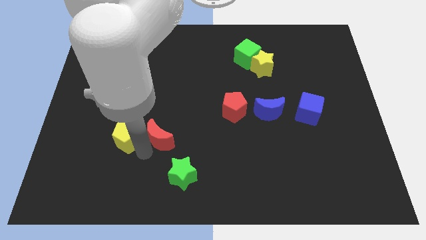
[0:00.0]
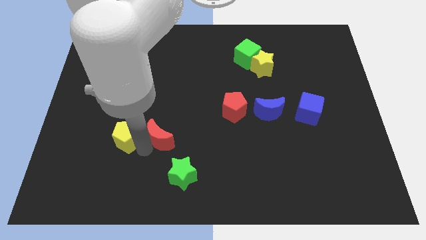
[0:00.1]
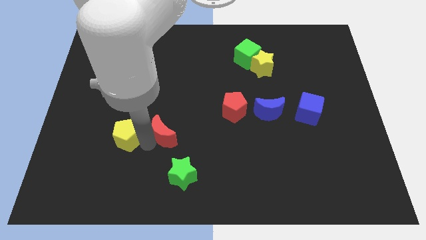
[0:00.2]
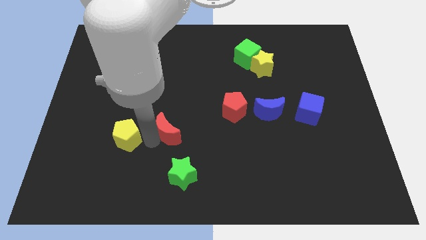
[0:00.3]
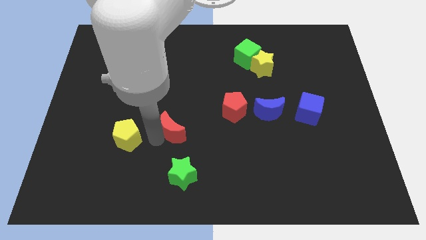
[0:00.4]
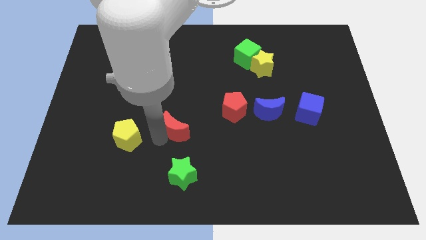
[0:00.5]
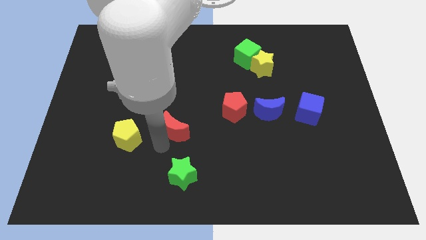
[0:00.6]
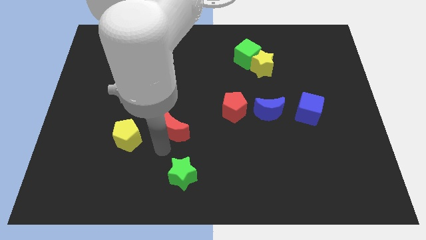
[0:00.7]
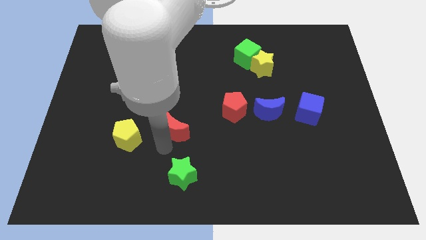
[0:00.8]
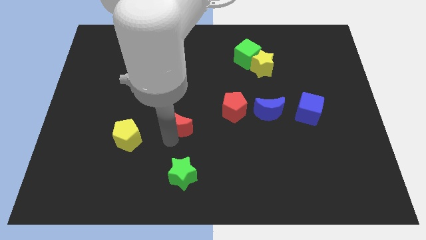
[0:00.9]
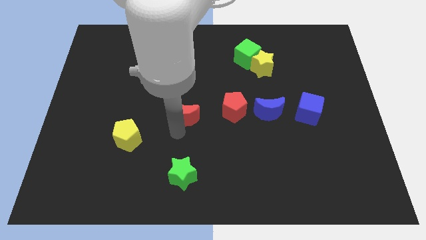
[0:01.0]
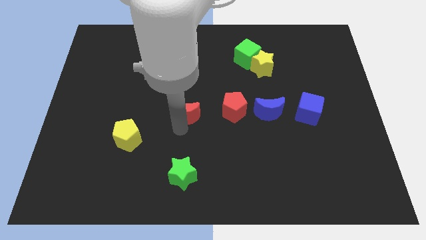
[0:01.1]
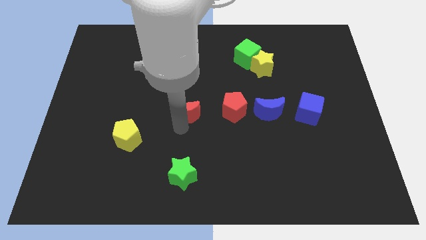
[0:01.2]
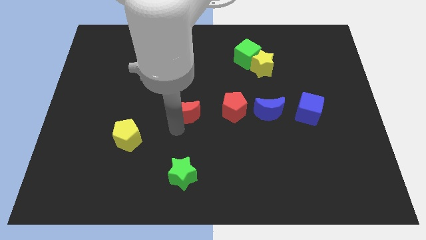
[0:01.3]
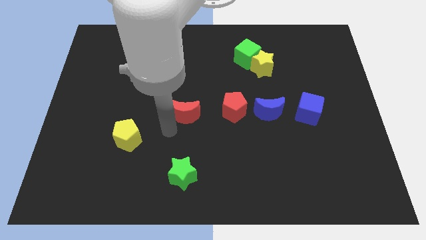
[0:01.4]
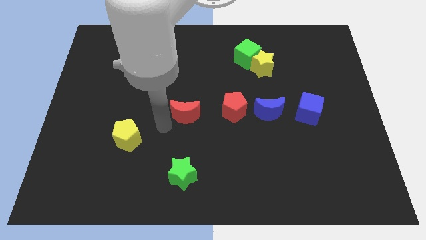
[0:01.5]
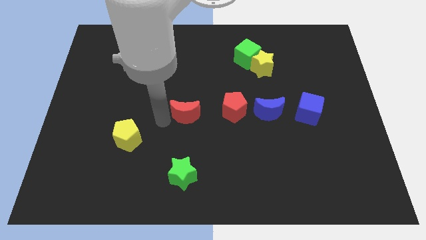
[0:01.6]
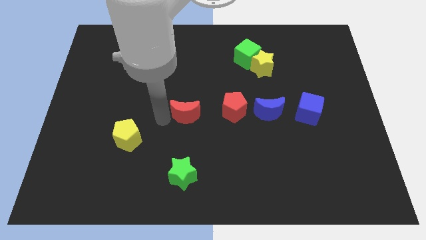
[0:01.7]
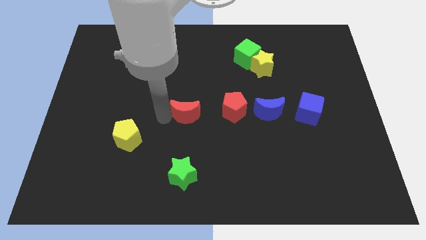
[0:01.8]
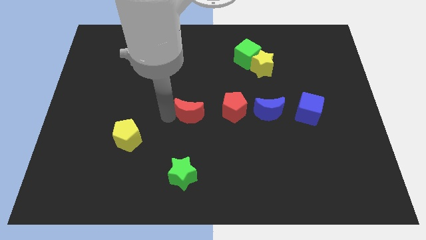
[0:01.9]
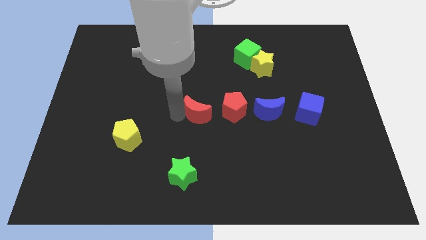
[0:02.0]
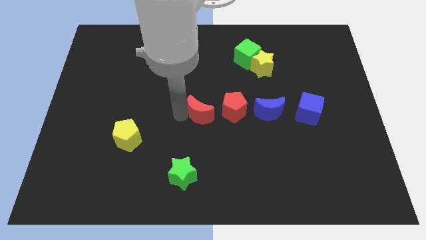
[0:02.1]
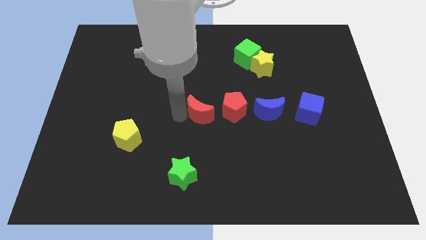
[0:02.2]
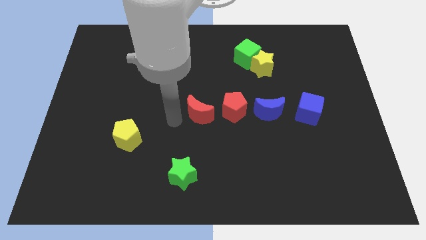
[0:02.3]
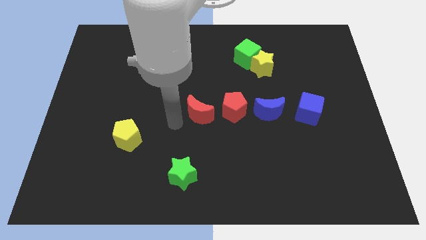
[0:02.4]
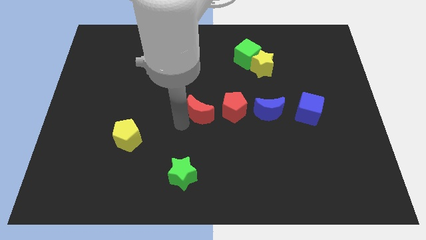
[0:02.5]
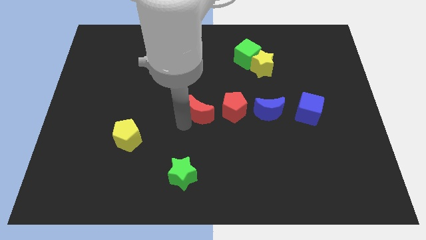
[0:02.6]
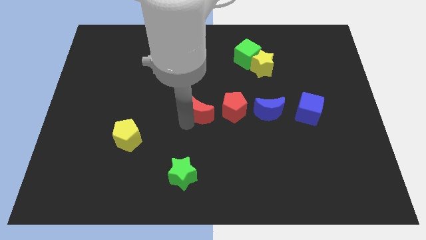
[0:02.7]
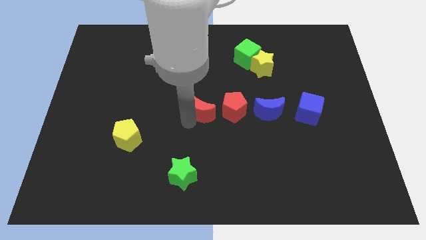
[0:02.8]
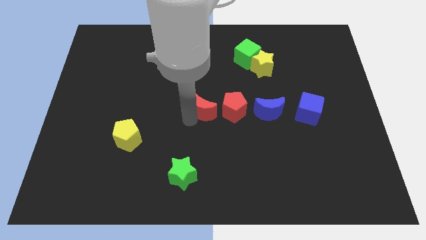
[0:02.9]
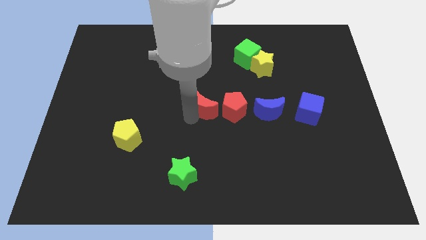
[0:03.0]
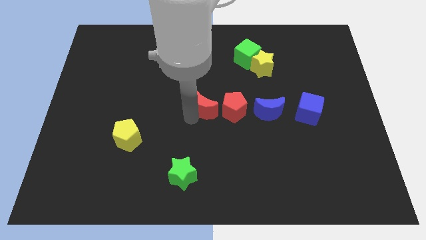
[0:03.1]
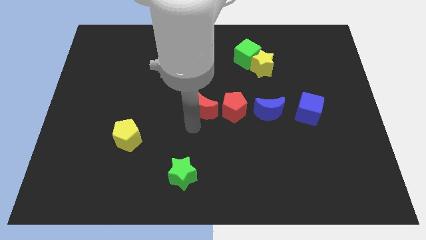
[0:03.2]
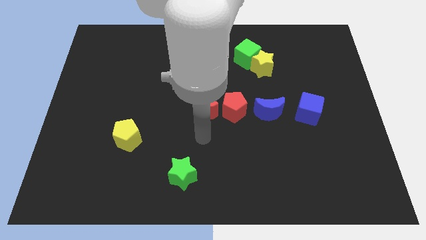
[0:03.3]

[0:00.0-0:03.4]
move the red moon at the left of the horizontal line of blocks

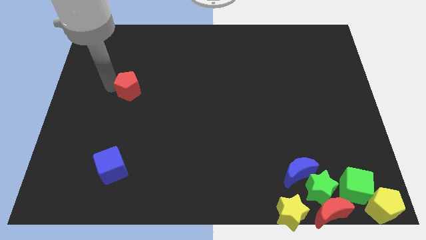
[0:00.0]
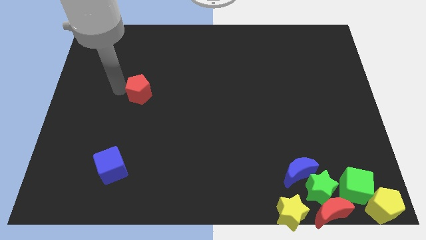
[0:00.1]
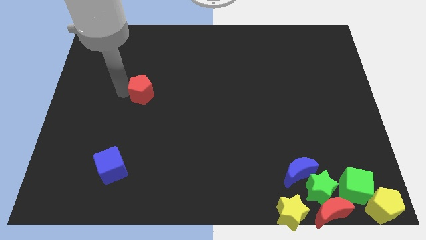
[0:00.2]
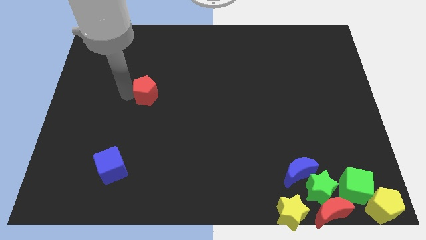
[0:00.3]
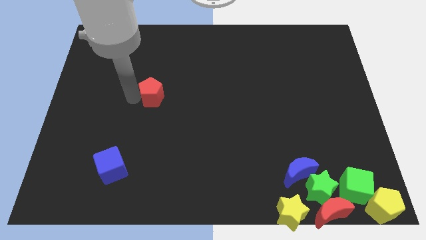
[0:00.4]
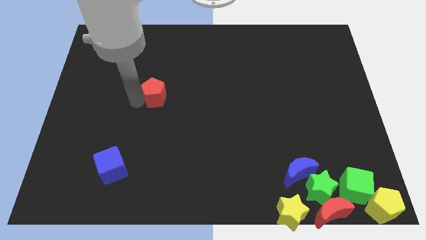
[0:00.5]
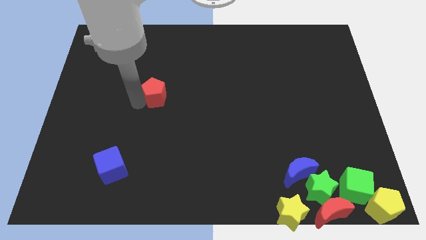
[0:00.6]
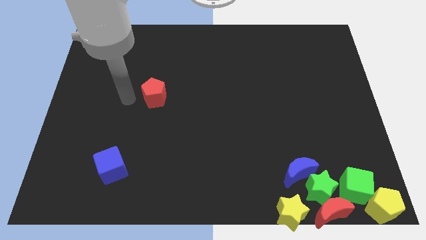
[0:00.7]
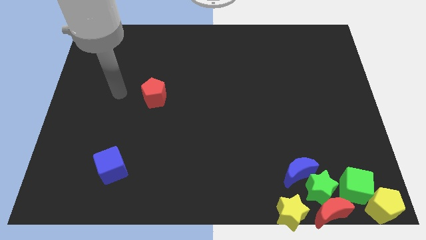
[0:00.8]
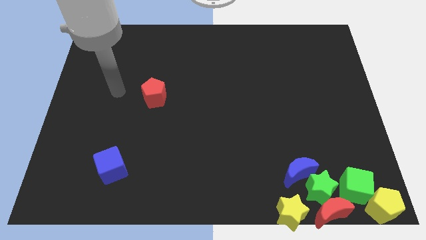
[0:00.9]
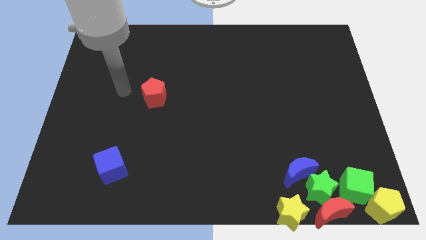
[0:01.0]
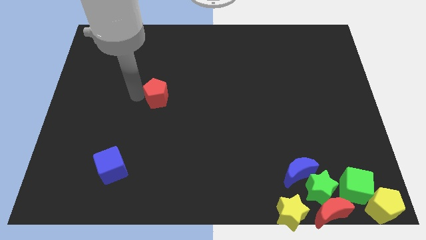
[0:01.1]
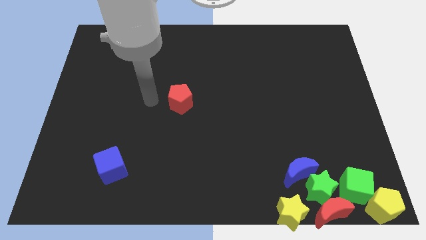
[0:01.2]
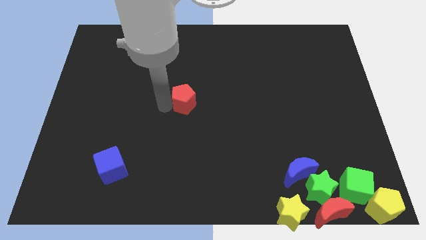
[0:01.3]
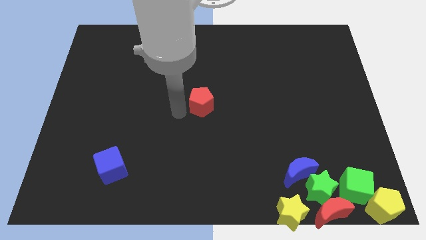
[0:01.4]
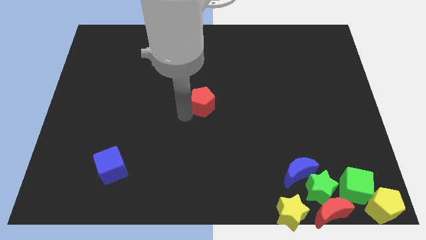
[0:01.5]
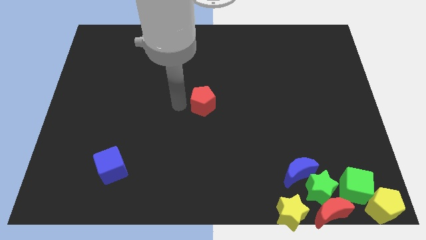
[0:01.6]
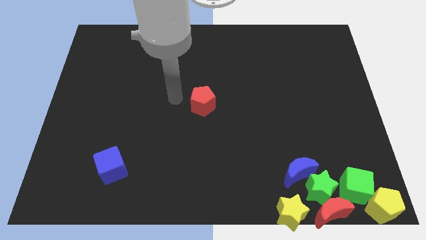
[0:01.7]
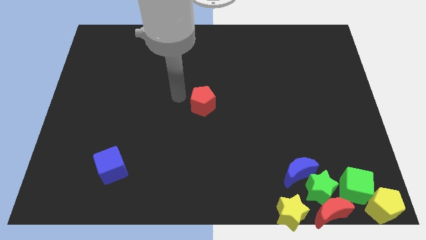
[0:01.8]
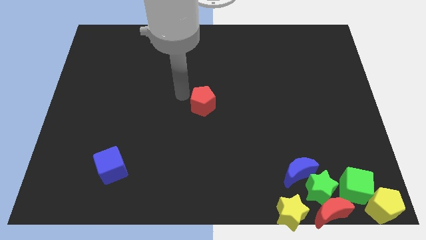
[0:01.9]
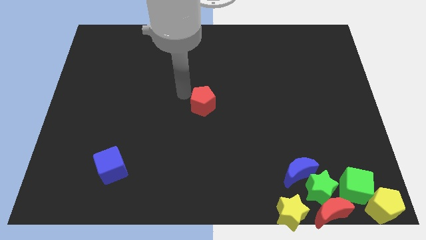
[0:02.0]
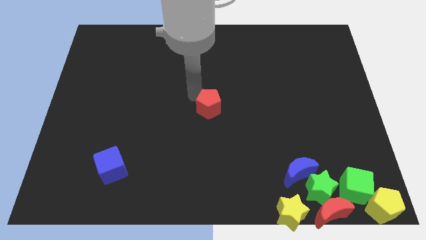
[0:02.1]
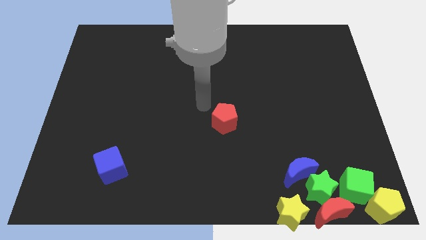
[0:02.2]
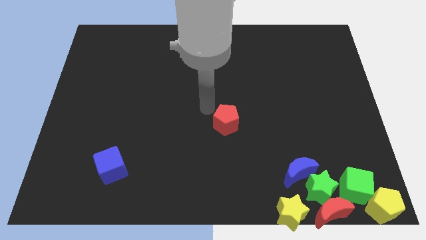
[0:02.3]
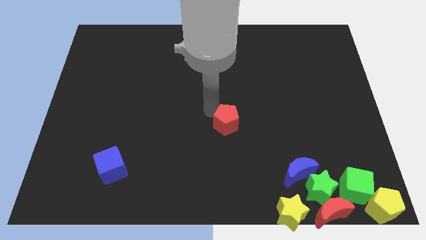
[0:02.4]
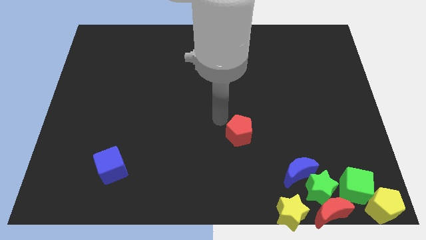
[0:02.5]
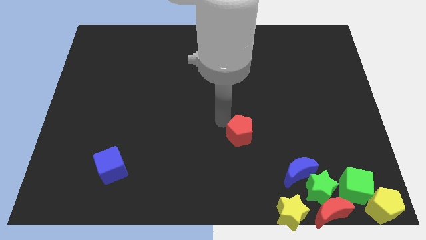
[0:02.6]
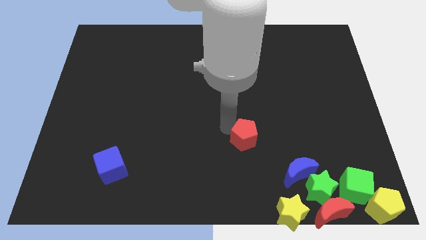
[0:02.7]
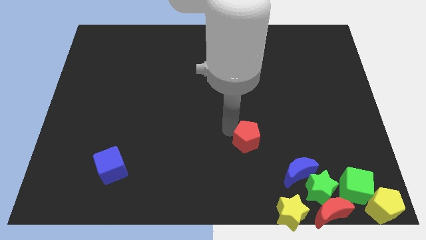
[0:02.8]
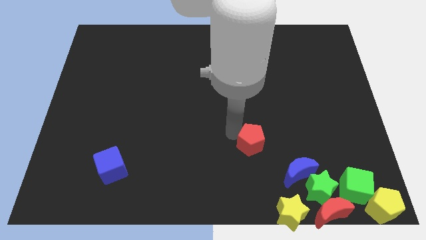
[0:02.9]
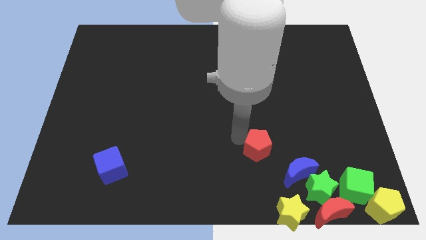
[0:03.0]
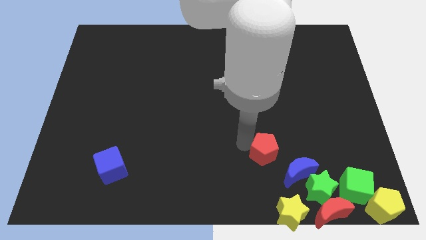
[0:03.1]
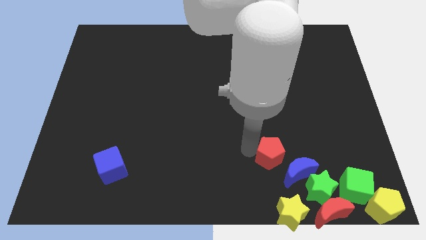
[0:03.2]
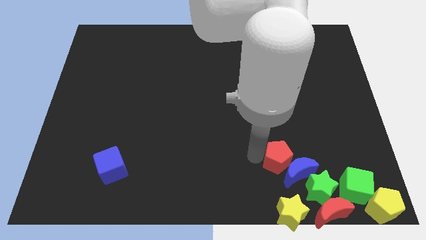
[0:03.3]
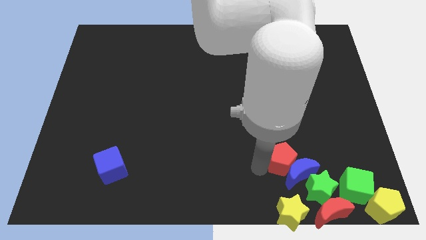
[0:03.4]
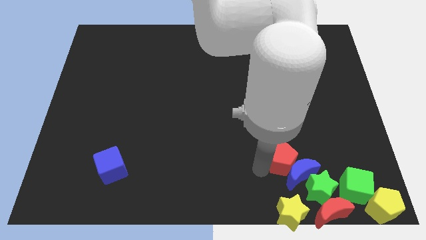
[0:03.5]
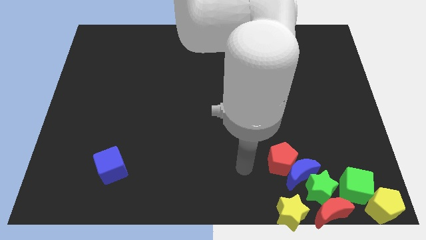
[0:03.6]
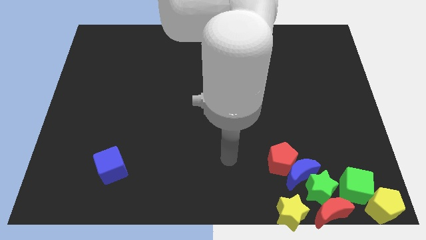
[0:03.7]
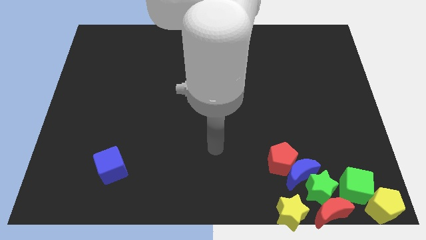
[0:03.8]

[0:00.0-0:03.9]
push the red pentagon into the blue crescent

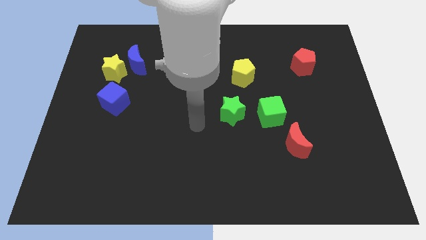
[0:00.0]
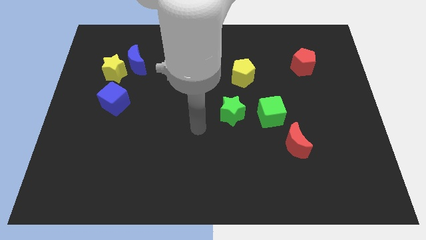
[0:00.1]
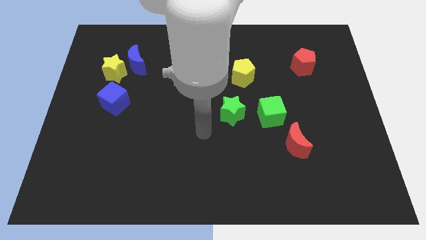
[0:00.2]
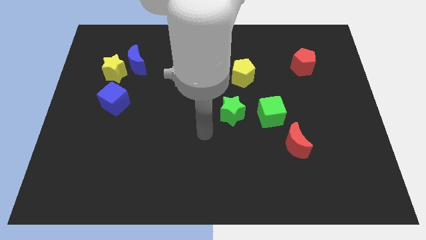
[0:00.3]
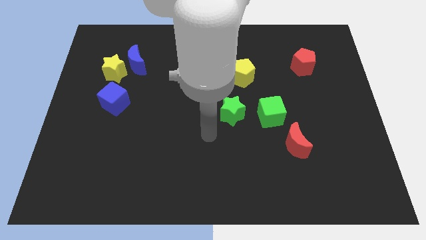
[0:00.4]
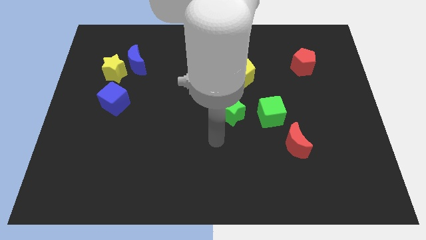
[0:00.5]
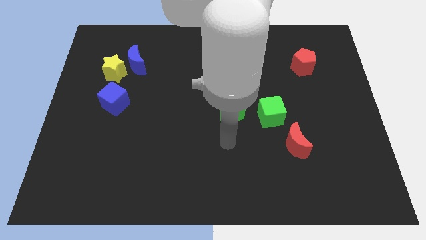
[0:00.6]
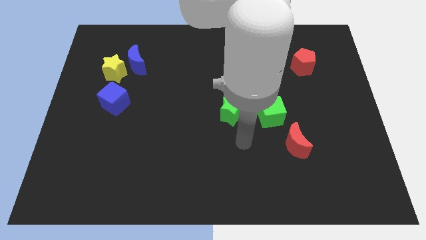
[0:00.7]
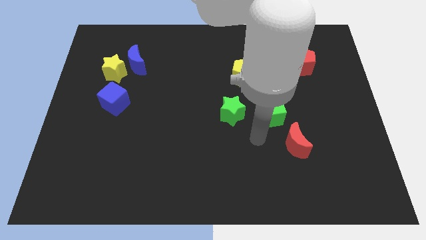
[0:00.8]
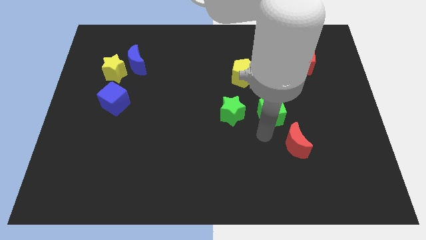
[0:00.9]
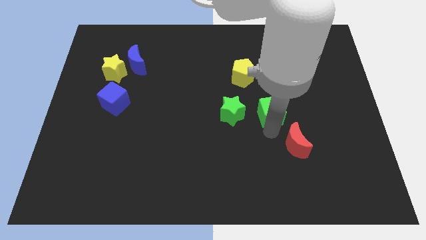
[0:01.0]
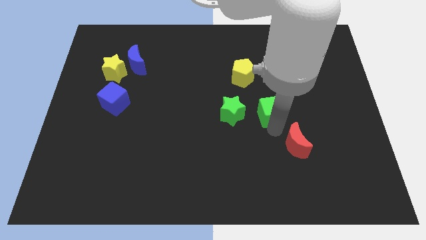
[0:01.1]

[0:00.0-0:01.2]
move your arm to the bottom of the green cube

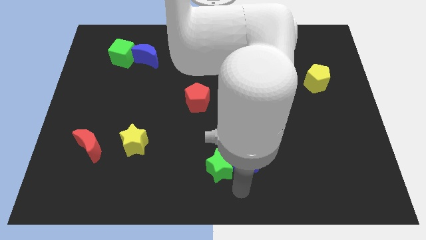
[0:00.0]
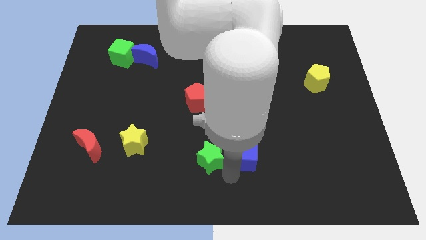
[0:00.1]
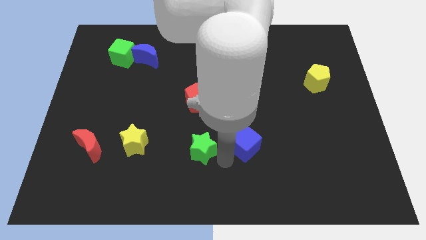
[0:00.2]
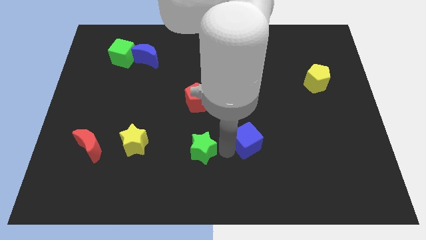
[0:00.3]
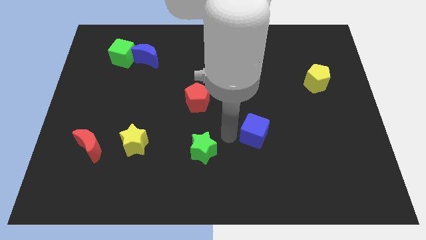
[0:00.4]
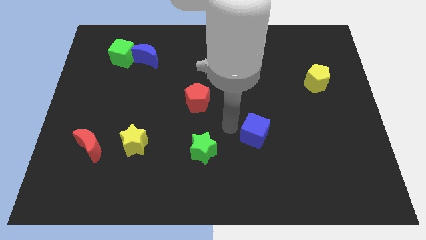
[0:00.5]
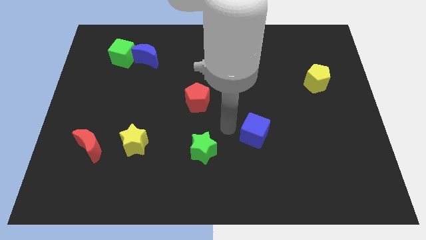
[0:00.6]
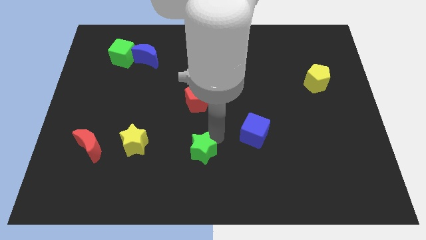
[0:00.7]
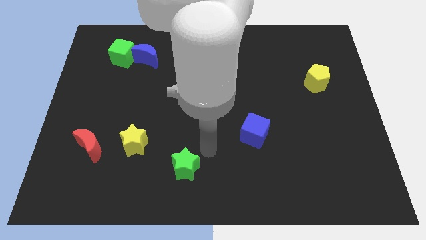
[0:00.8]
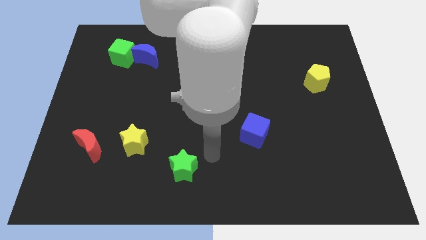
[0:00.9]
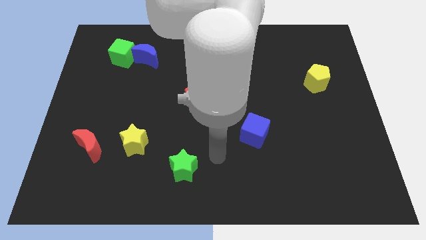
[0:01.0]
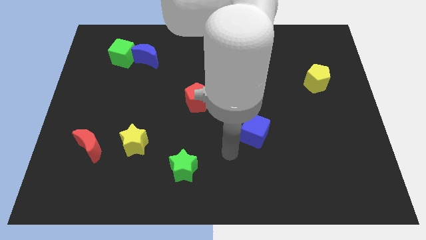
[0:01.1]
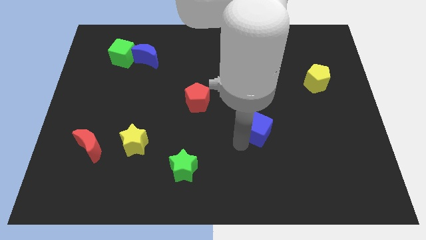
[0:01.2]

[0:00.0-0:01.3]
move the green star to the bottom right side of the yellow star
